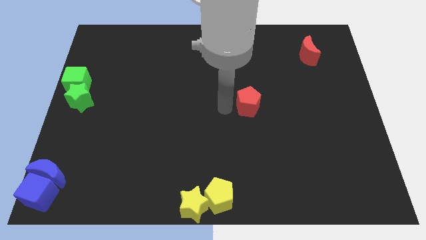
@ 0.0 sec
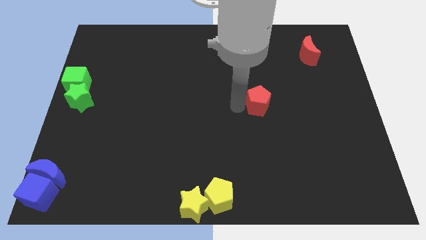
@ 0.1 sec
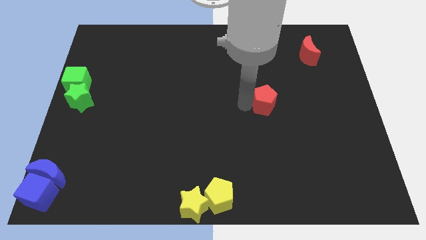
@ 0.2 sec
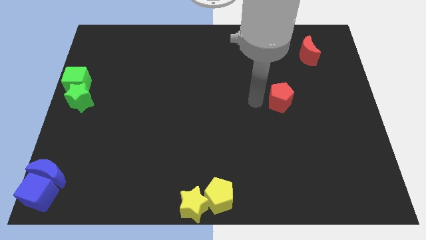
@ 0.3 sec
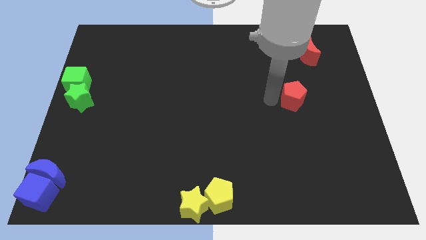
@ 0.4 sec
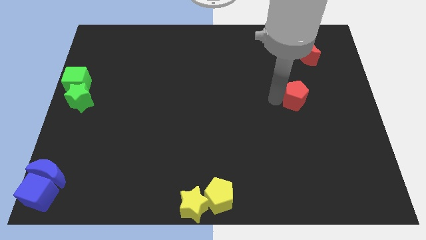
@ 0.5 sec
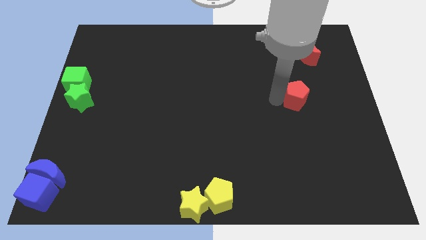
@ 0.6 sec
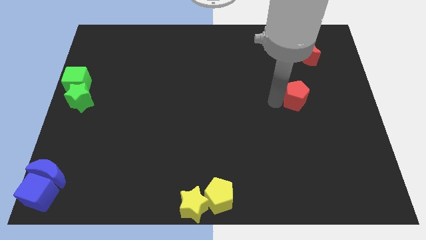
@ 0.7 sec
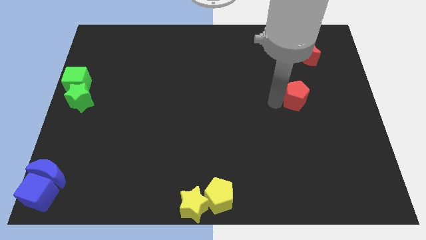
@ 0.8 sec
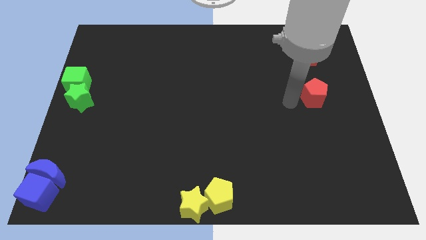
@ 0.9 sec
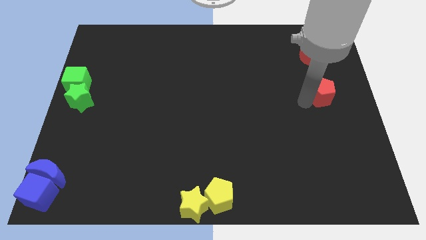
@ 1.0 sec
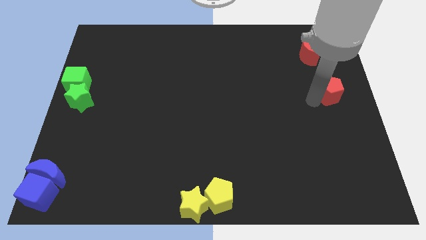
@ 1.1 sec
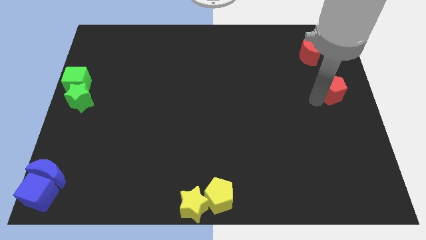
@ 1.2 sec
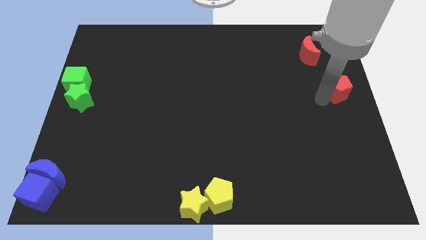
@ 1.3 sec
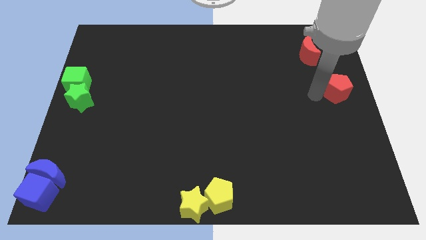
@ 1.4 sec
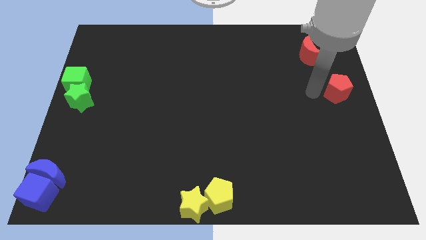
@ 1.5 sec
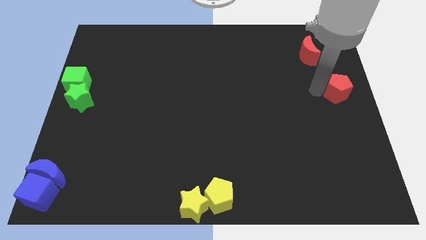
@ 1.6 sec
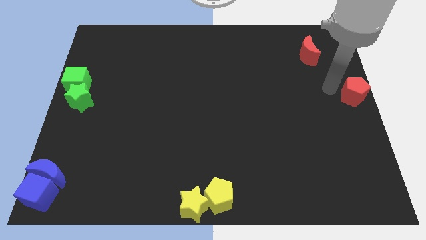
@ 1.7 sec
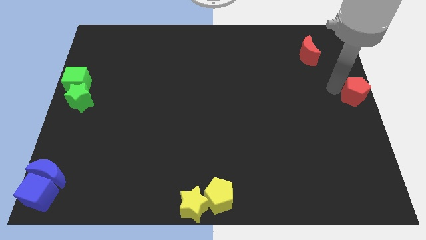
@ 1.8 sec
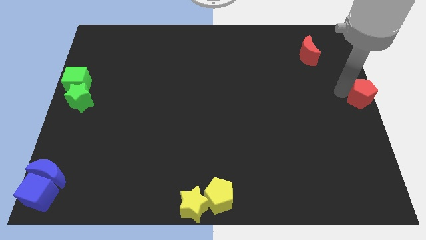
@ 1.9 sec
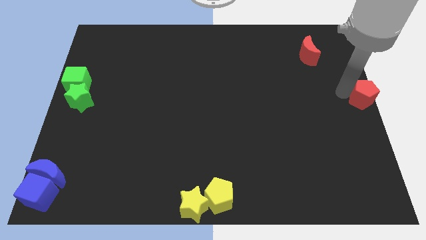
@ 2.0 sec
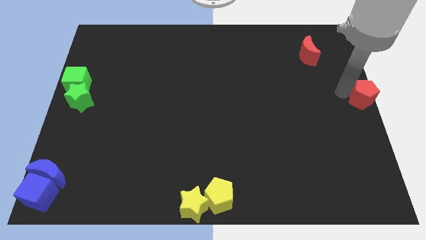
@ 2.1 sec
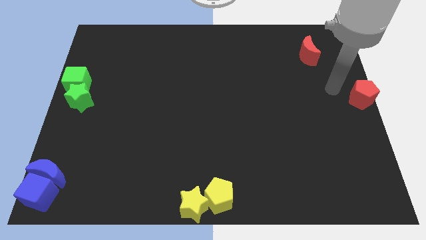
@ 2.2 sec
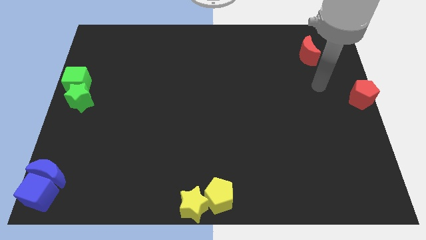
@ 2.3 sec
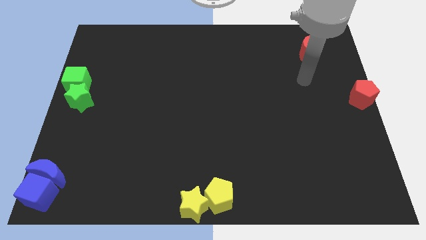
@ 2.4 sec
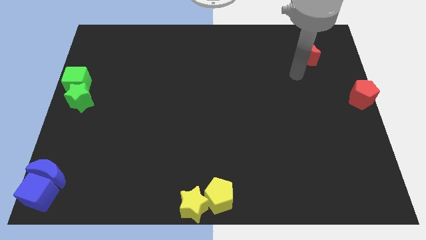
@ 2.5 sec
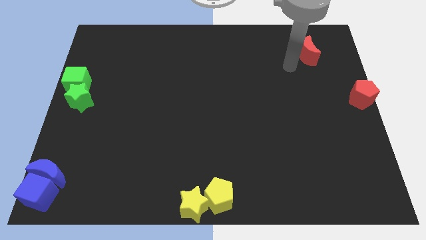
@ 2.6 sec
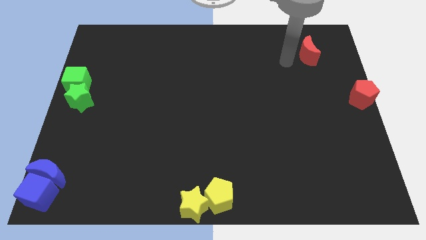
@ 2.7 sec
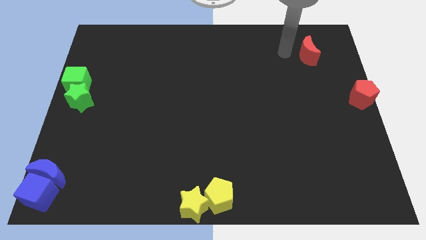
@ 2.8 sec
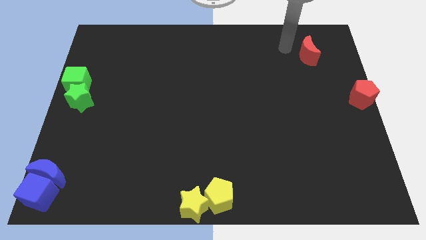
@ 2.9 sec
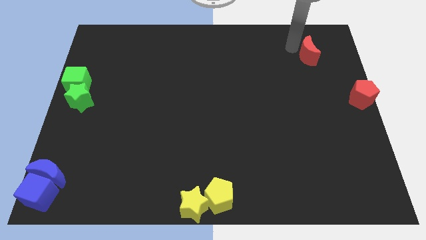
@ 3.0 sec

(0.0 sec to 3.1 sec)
put the red pentagon at the center right of the board

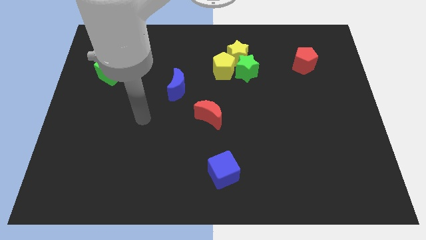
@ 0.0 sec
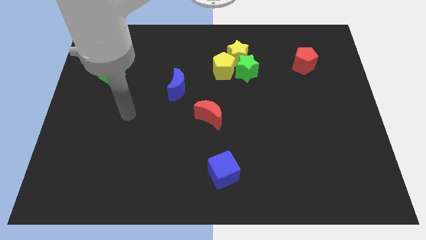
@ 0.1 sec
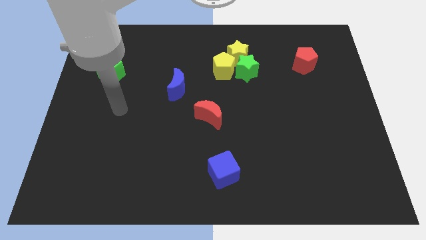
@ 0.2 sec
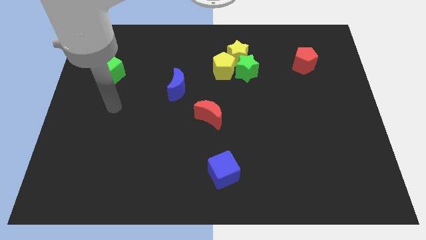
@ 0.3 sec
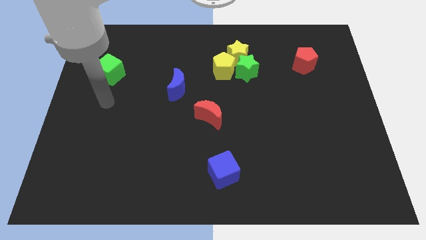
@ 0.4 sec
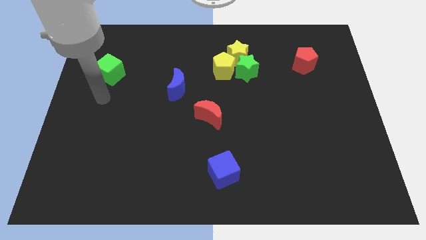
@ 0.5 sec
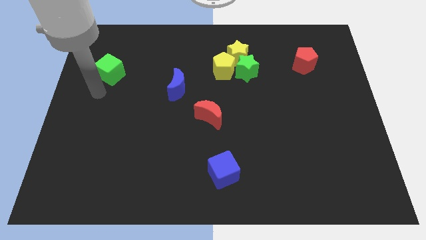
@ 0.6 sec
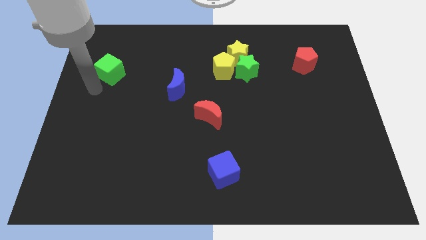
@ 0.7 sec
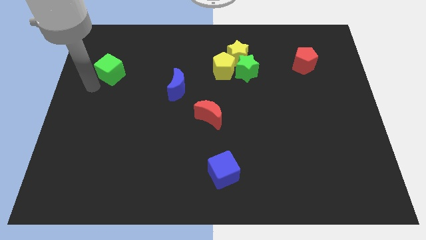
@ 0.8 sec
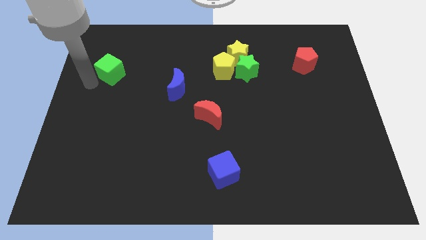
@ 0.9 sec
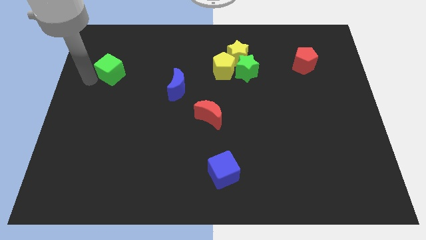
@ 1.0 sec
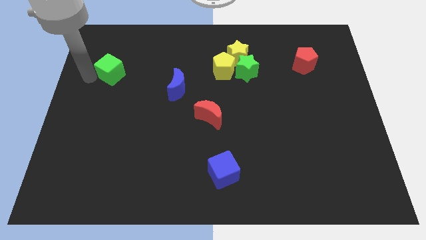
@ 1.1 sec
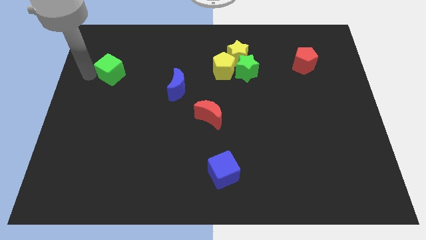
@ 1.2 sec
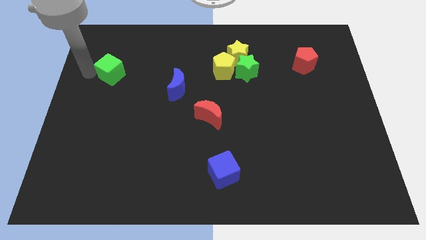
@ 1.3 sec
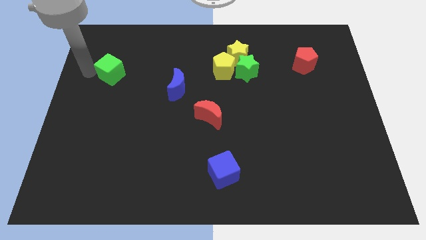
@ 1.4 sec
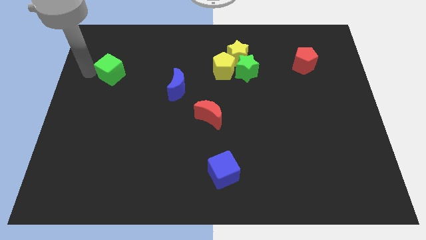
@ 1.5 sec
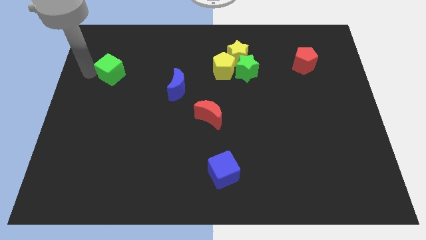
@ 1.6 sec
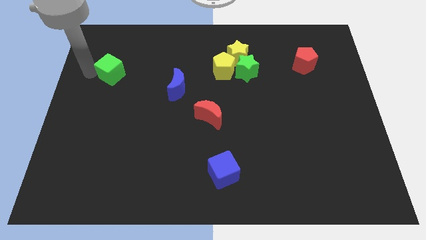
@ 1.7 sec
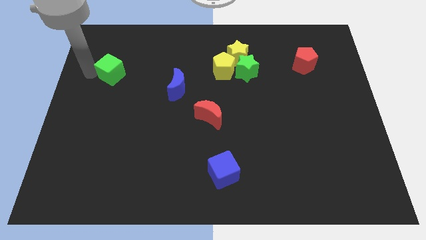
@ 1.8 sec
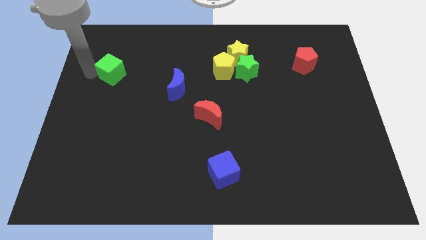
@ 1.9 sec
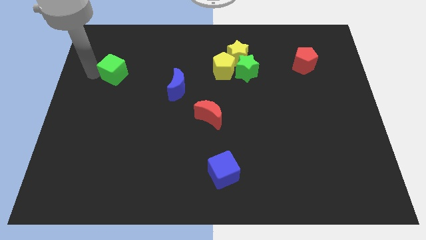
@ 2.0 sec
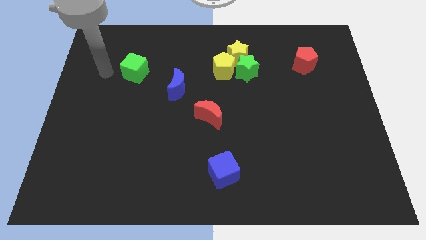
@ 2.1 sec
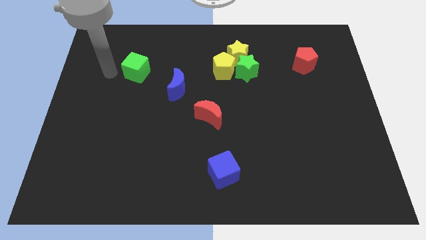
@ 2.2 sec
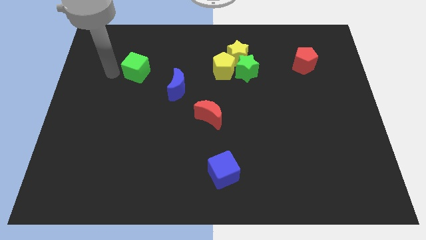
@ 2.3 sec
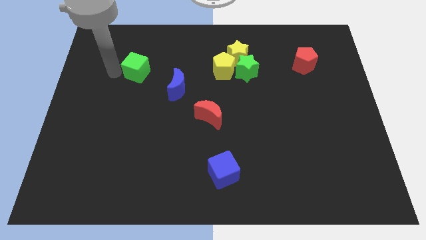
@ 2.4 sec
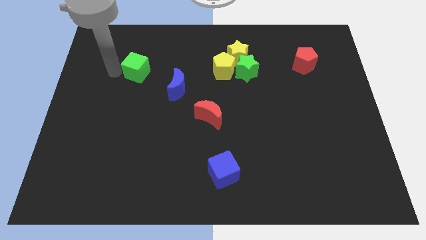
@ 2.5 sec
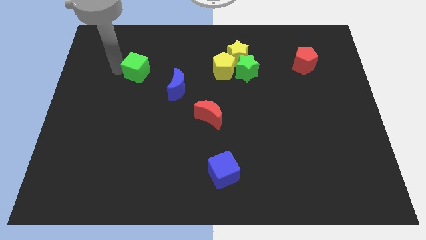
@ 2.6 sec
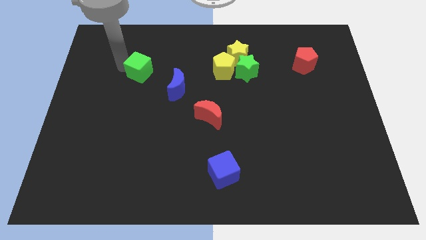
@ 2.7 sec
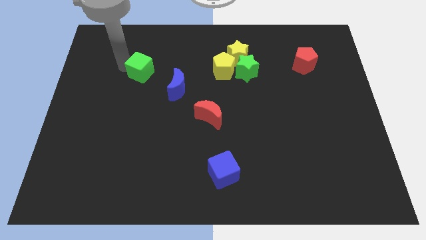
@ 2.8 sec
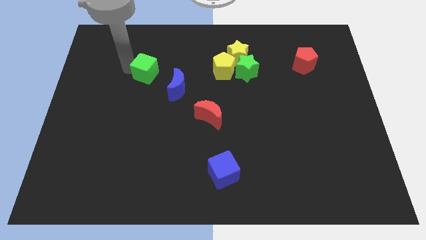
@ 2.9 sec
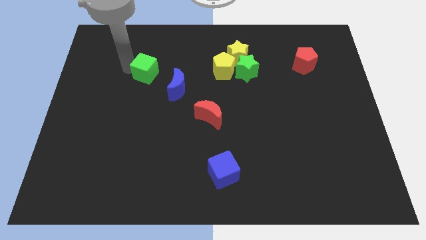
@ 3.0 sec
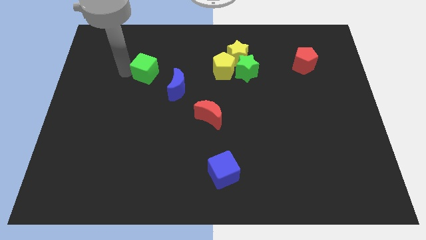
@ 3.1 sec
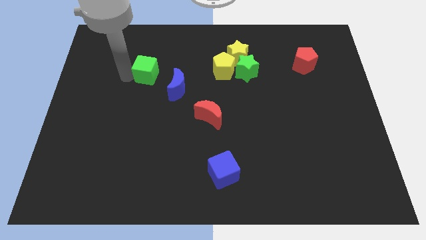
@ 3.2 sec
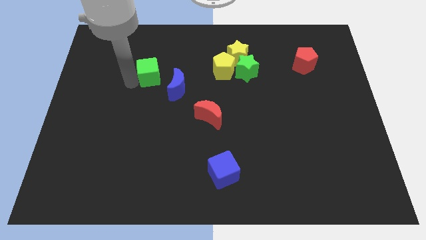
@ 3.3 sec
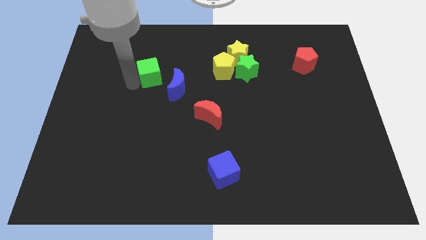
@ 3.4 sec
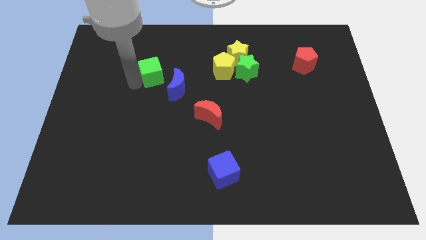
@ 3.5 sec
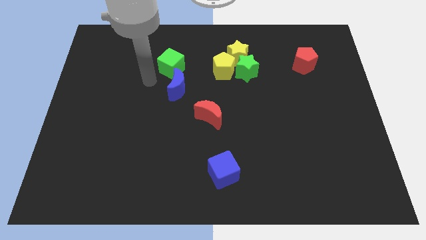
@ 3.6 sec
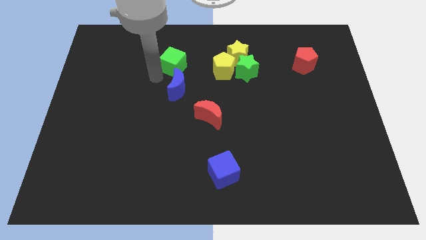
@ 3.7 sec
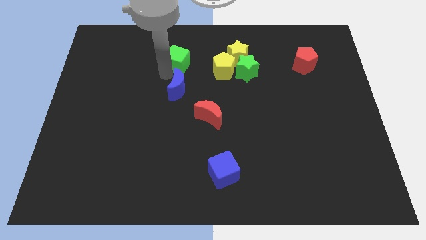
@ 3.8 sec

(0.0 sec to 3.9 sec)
move the green cube to the top of the blue moon

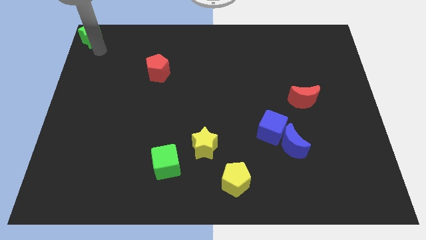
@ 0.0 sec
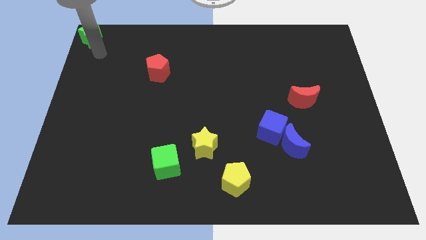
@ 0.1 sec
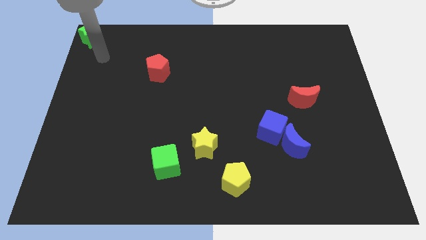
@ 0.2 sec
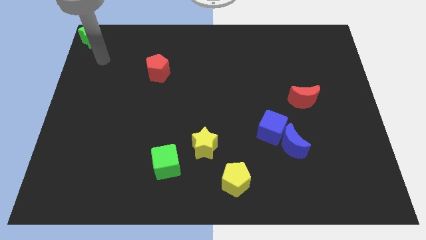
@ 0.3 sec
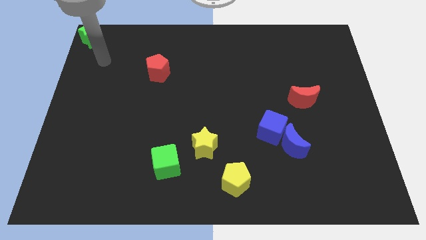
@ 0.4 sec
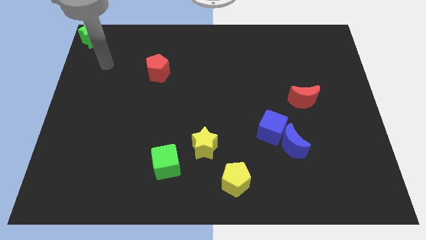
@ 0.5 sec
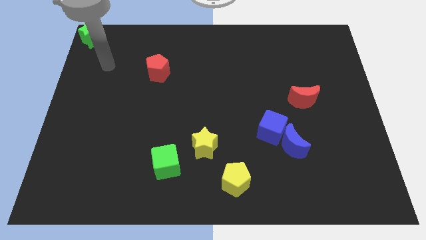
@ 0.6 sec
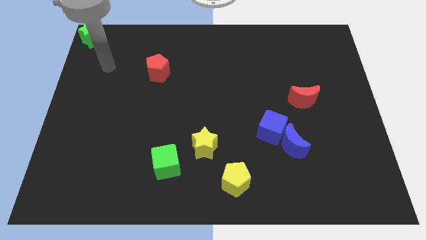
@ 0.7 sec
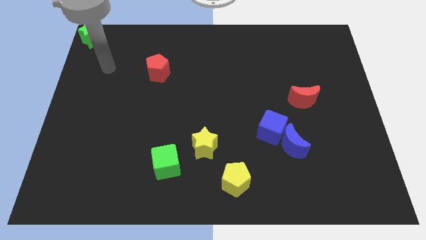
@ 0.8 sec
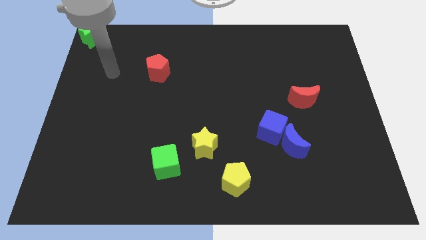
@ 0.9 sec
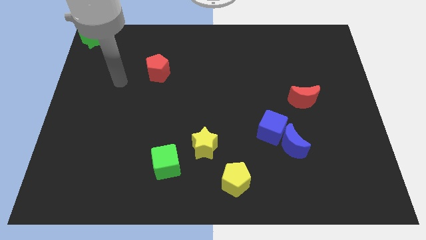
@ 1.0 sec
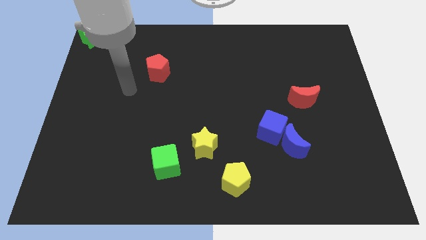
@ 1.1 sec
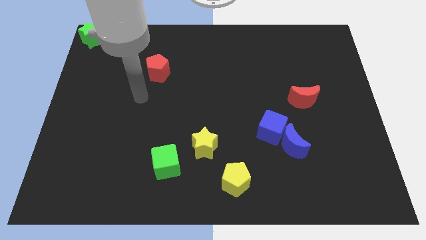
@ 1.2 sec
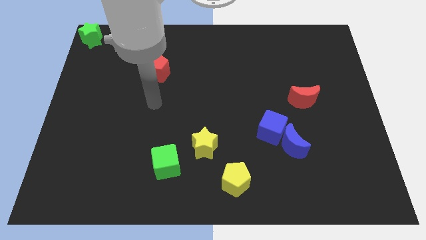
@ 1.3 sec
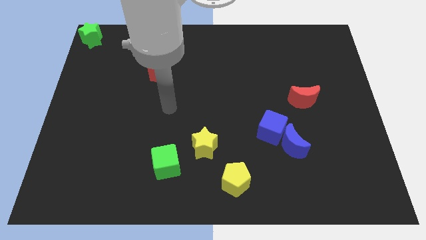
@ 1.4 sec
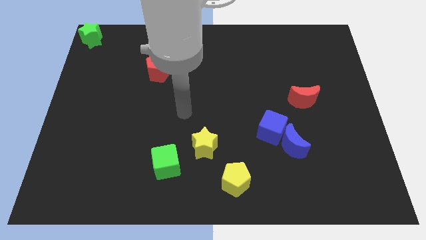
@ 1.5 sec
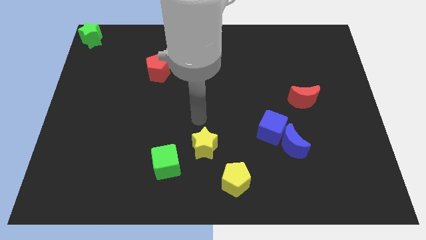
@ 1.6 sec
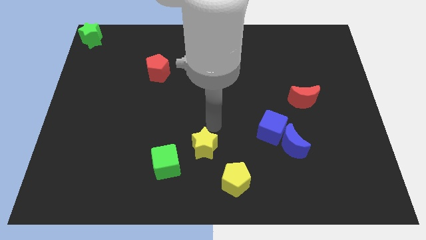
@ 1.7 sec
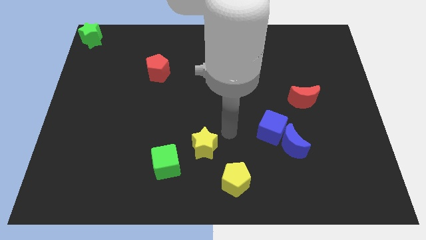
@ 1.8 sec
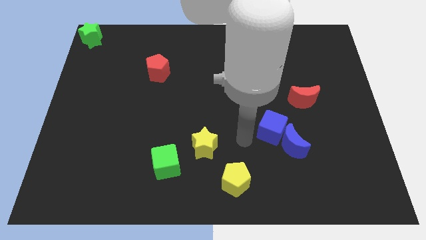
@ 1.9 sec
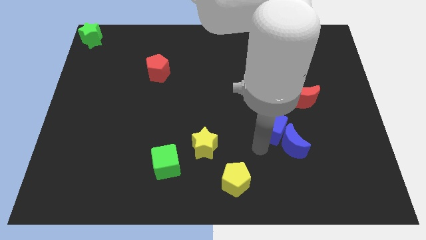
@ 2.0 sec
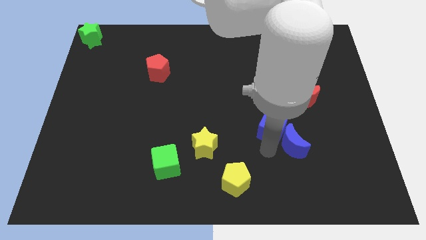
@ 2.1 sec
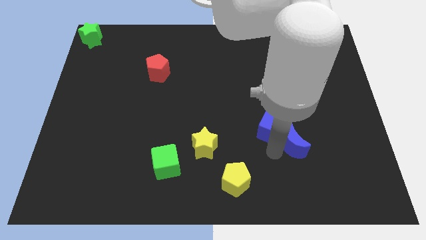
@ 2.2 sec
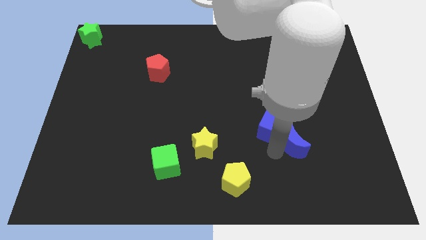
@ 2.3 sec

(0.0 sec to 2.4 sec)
move the arm towards the blue cube
